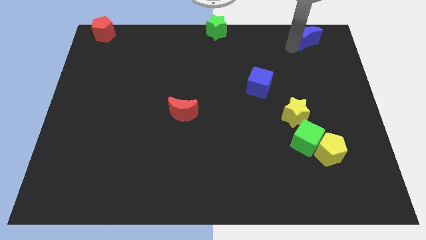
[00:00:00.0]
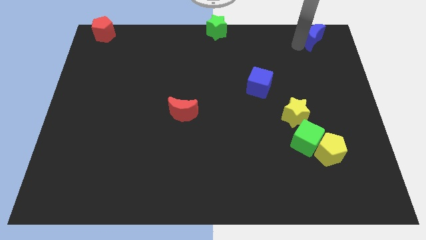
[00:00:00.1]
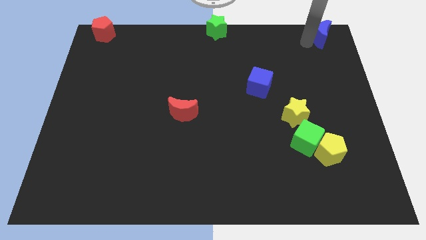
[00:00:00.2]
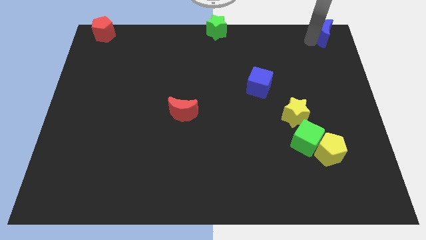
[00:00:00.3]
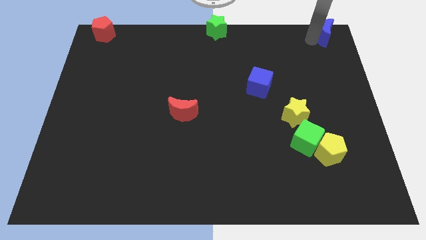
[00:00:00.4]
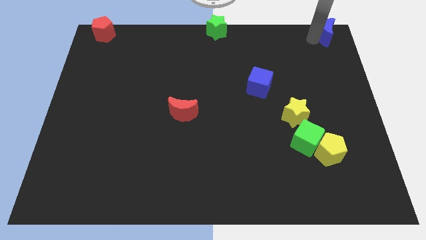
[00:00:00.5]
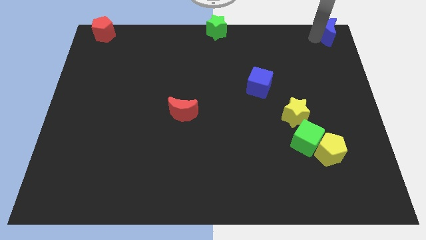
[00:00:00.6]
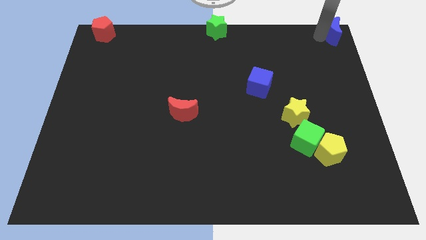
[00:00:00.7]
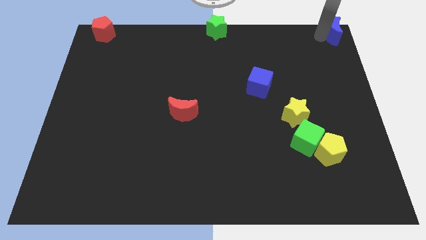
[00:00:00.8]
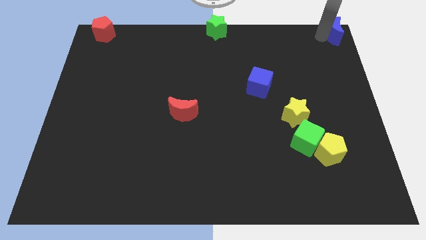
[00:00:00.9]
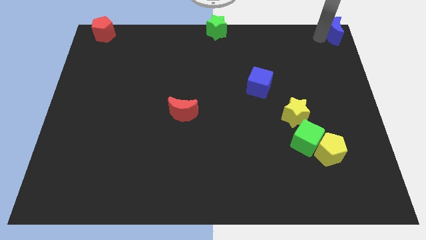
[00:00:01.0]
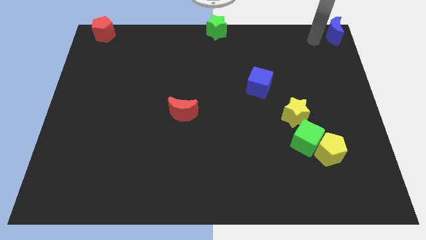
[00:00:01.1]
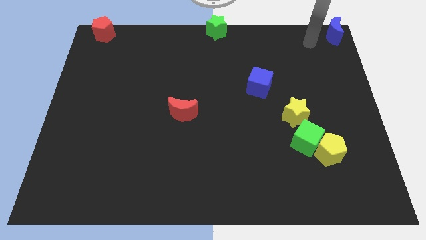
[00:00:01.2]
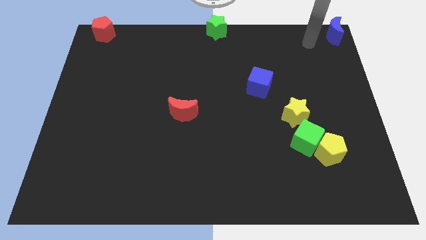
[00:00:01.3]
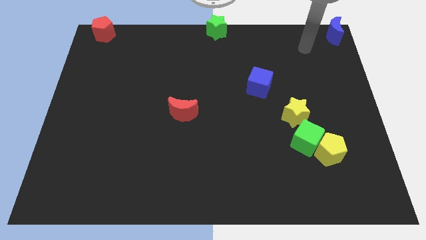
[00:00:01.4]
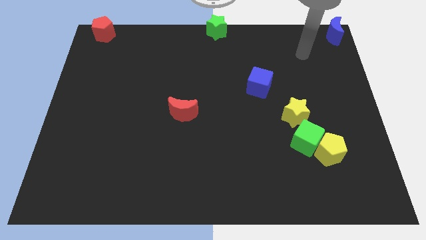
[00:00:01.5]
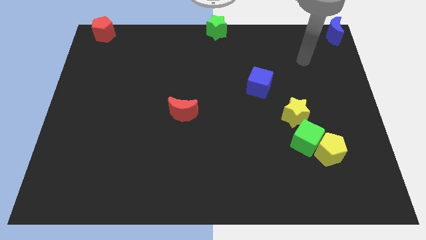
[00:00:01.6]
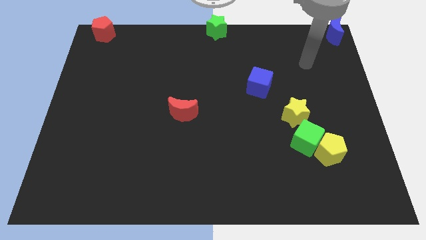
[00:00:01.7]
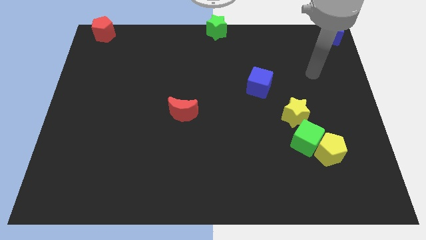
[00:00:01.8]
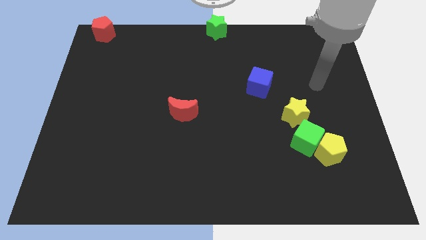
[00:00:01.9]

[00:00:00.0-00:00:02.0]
push the blue moon to the top right corner of the board

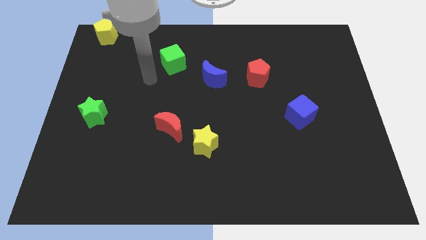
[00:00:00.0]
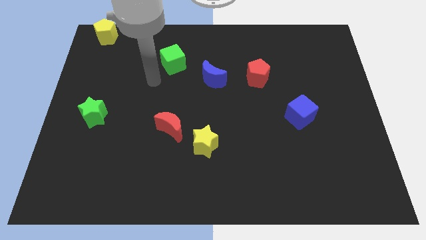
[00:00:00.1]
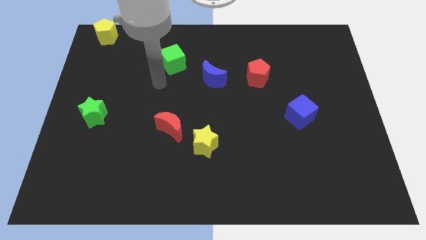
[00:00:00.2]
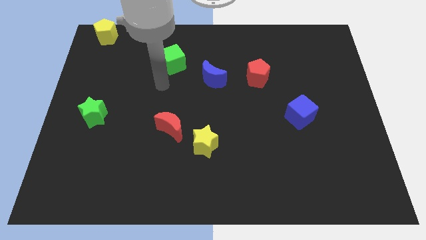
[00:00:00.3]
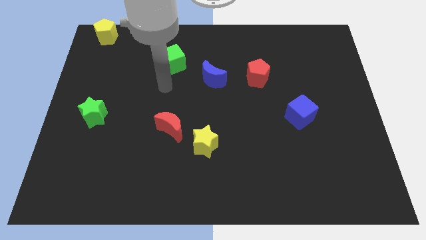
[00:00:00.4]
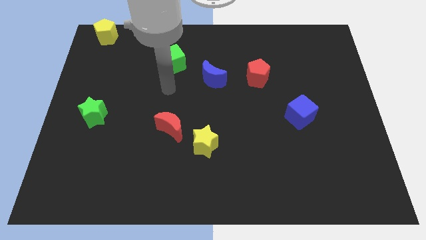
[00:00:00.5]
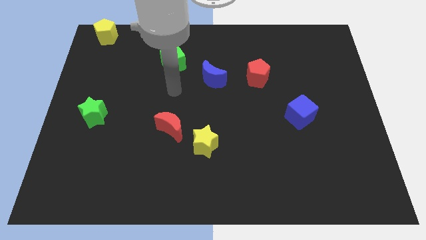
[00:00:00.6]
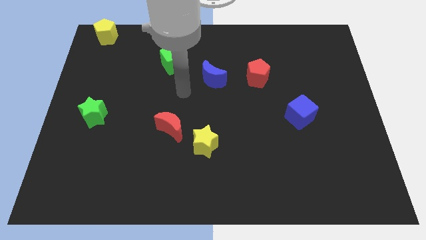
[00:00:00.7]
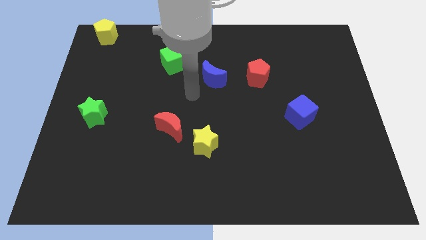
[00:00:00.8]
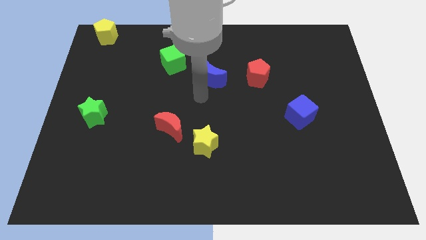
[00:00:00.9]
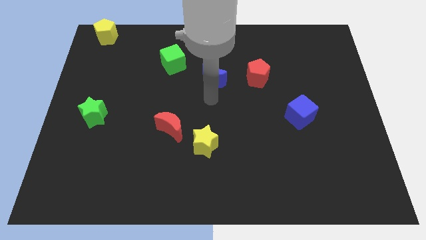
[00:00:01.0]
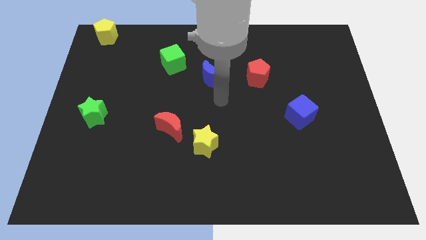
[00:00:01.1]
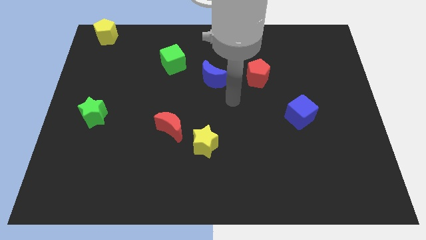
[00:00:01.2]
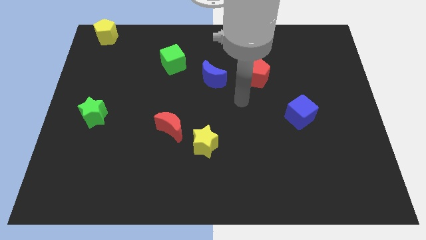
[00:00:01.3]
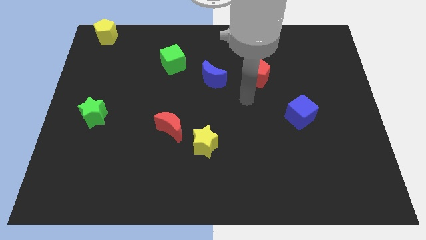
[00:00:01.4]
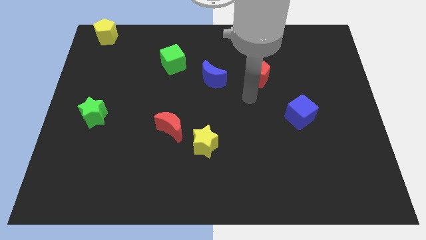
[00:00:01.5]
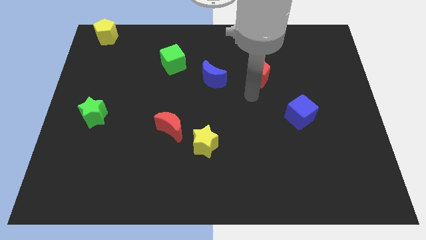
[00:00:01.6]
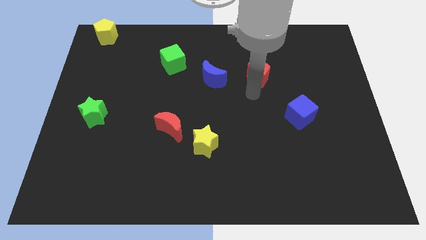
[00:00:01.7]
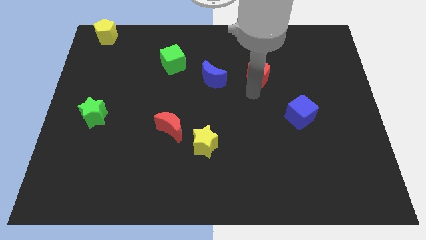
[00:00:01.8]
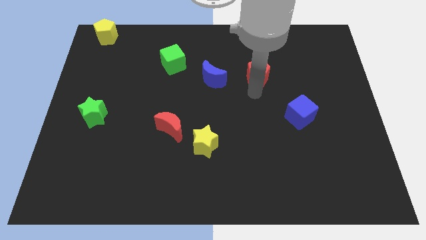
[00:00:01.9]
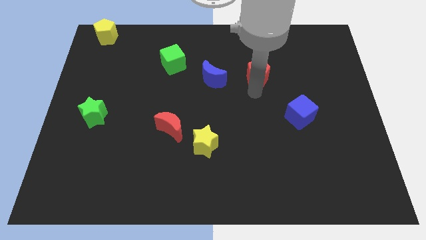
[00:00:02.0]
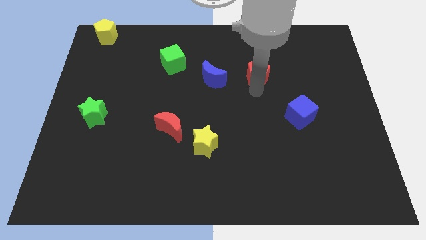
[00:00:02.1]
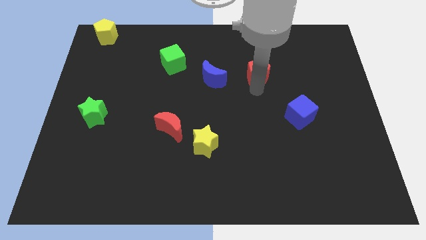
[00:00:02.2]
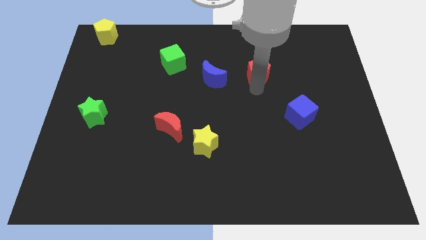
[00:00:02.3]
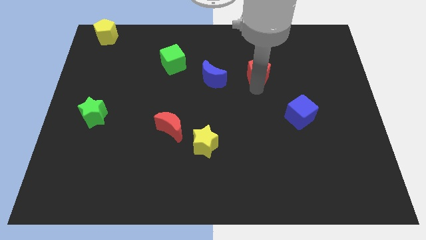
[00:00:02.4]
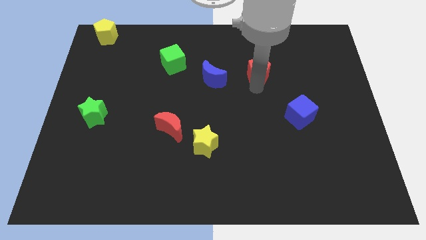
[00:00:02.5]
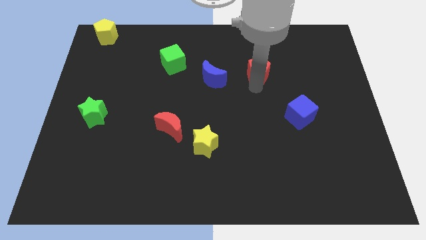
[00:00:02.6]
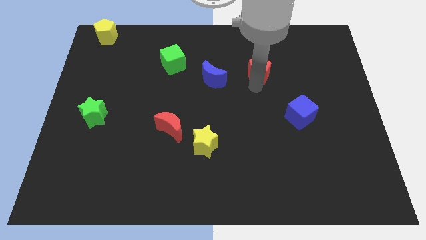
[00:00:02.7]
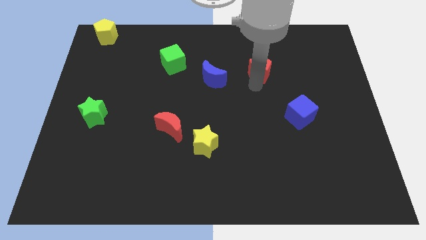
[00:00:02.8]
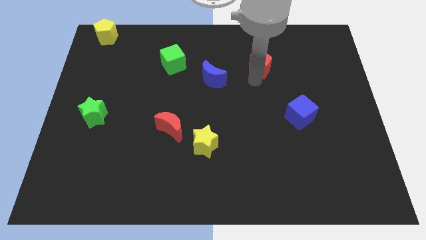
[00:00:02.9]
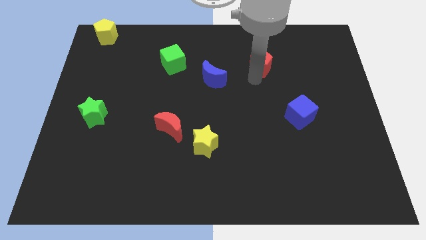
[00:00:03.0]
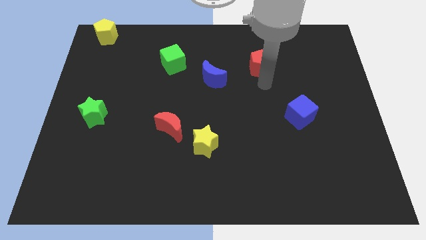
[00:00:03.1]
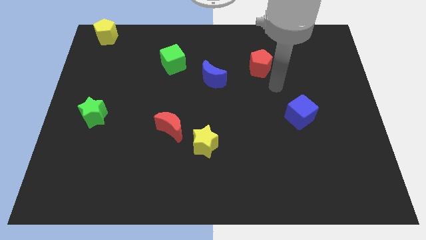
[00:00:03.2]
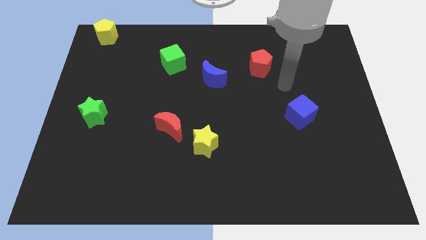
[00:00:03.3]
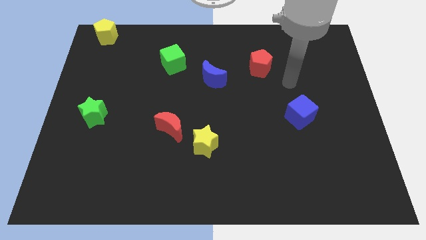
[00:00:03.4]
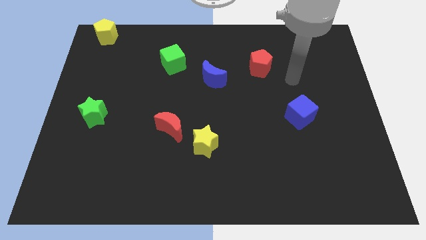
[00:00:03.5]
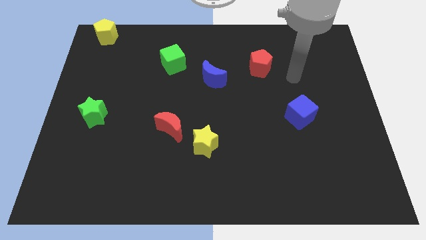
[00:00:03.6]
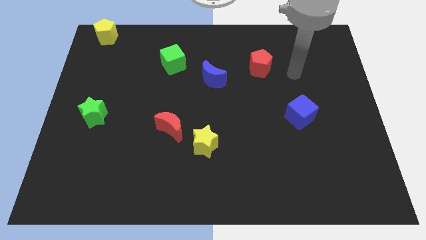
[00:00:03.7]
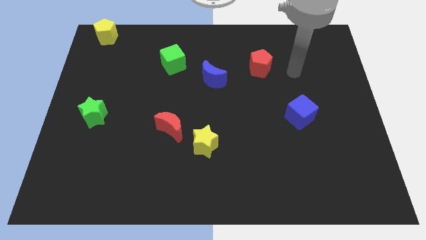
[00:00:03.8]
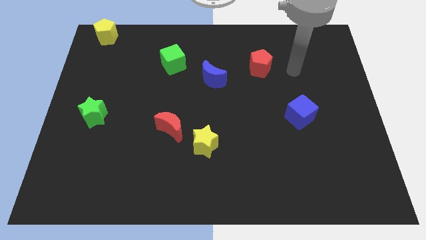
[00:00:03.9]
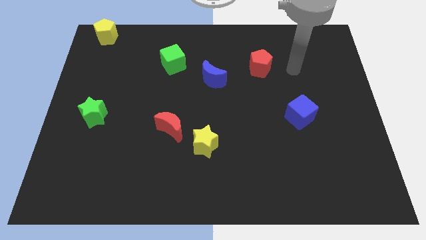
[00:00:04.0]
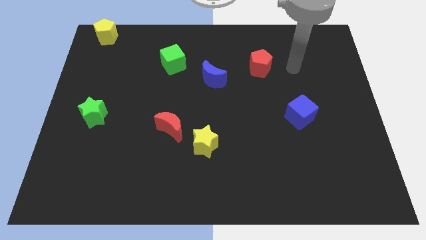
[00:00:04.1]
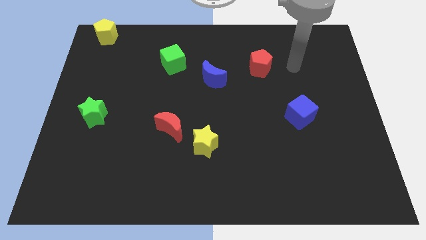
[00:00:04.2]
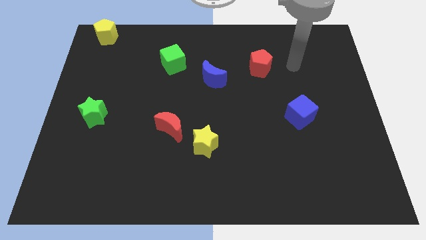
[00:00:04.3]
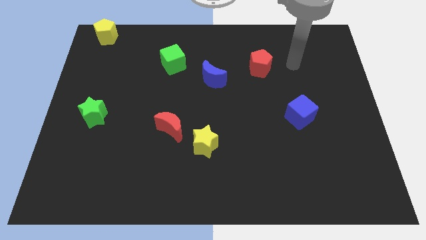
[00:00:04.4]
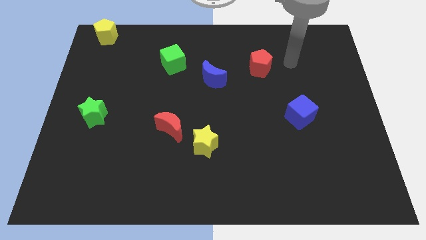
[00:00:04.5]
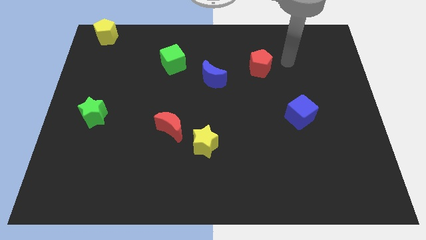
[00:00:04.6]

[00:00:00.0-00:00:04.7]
slide the red pentagon horizontally to the right side of the green cube

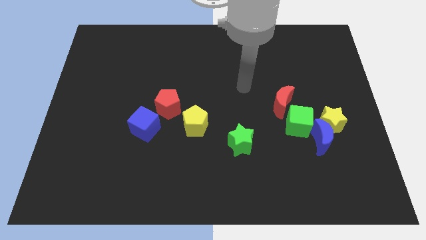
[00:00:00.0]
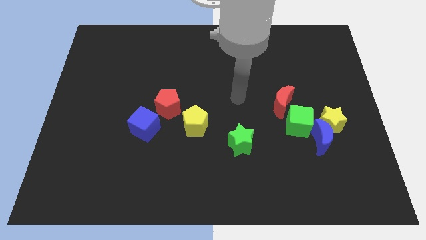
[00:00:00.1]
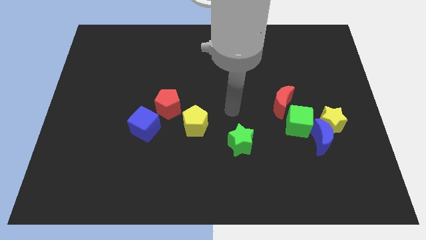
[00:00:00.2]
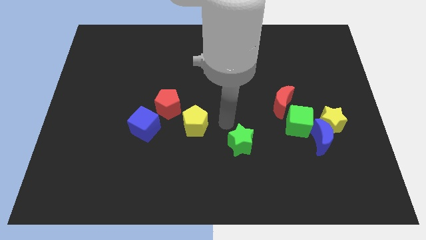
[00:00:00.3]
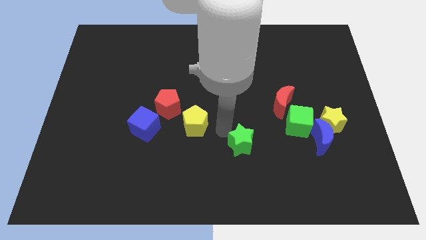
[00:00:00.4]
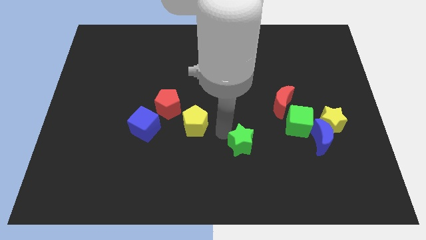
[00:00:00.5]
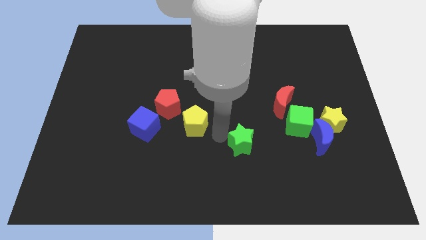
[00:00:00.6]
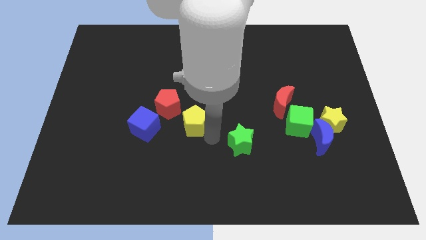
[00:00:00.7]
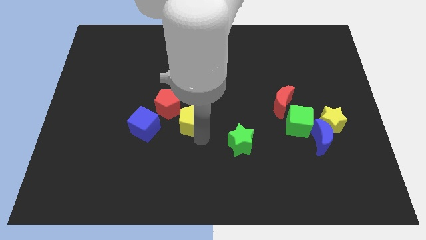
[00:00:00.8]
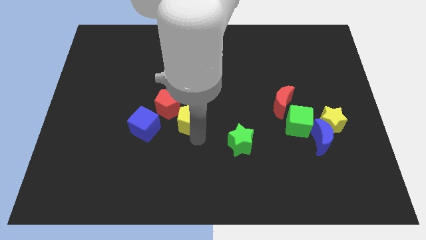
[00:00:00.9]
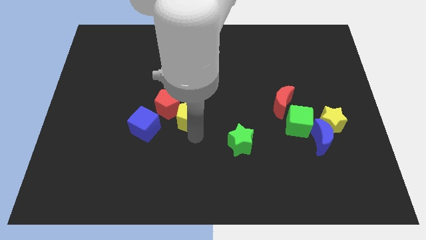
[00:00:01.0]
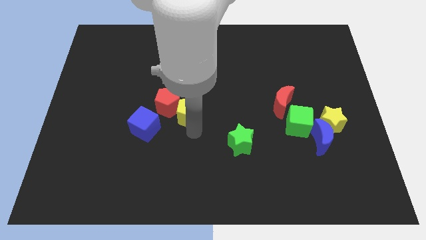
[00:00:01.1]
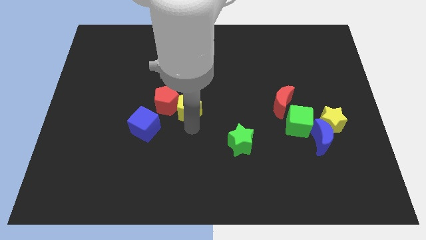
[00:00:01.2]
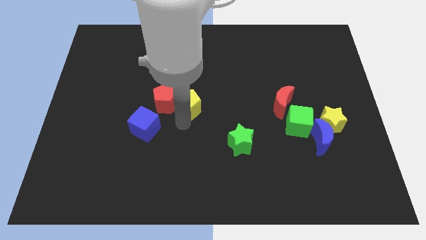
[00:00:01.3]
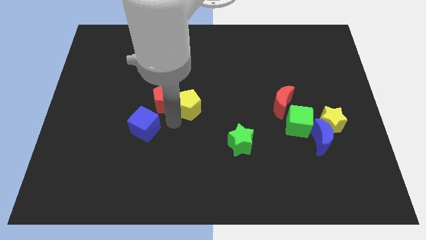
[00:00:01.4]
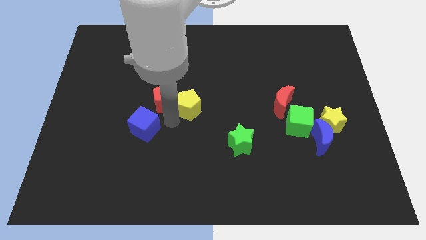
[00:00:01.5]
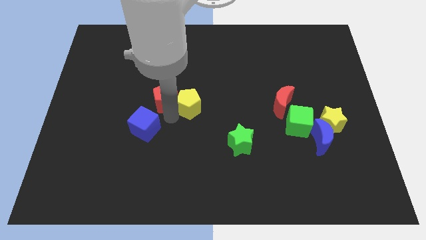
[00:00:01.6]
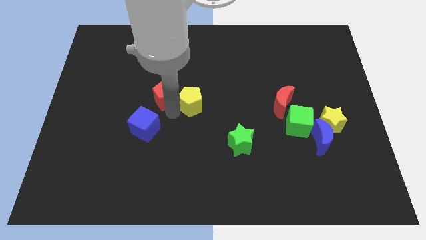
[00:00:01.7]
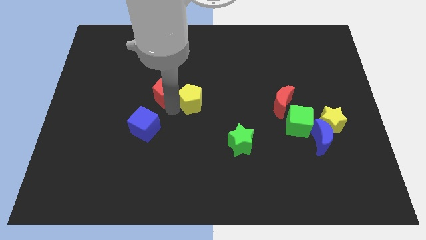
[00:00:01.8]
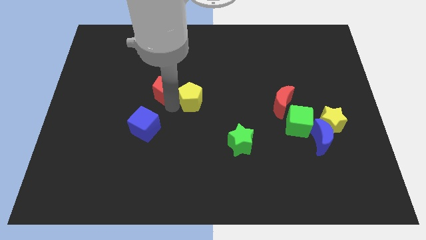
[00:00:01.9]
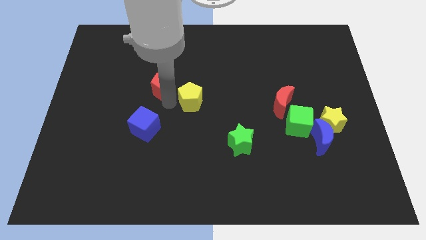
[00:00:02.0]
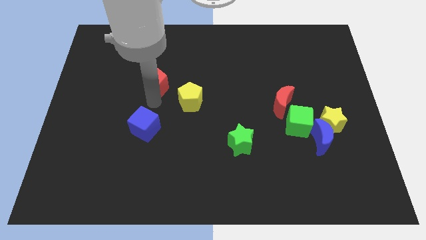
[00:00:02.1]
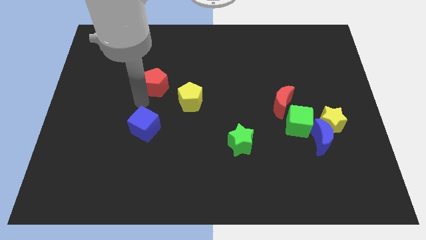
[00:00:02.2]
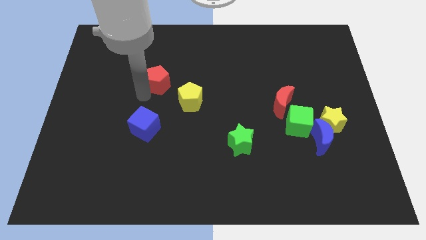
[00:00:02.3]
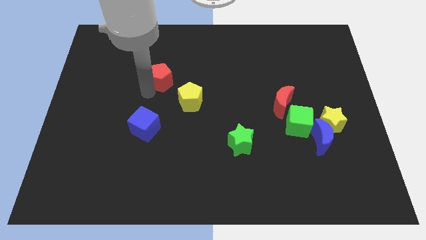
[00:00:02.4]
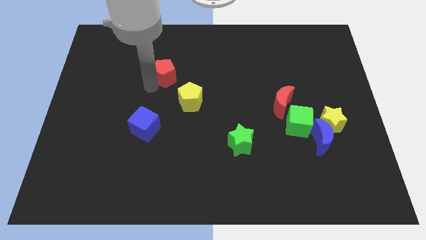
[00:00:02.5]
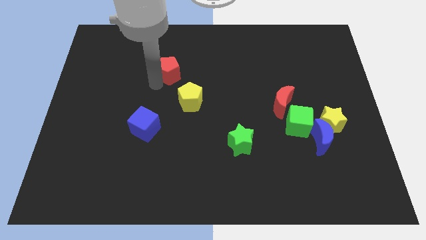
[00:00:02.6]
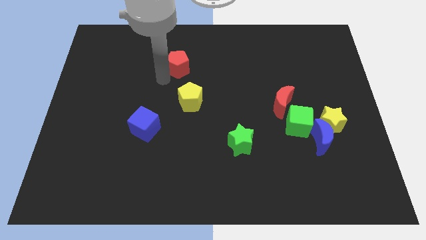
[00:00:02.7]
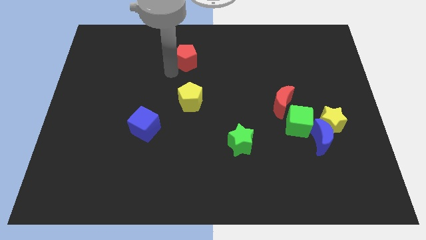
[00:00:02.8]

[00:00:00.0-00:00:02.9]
push the yellow pentagon into the red pentagon
